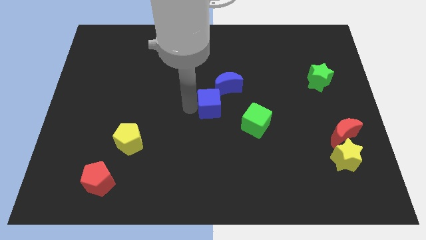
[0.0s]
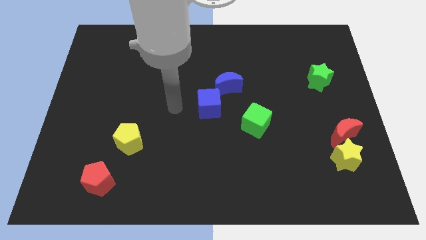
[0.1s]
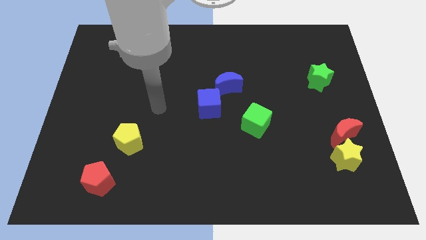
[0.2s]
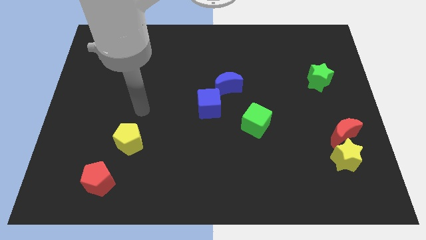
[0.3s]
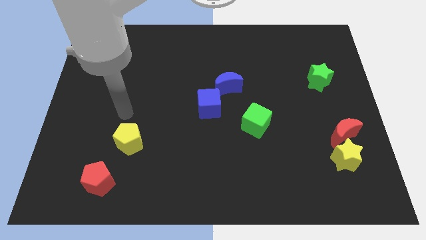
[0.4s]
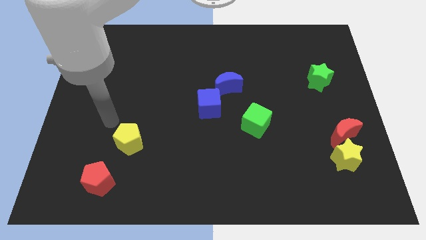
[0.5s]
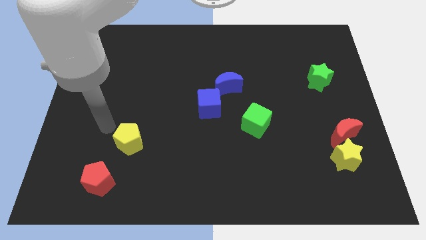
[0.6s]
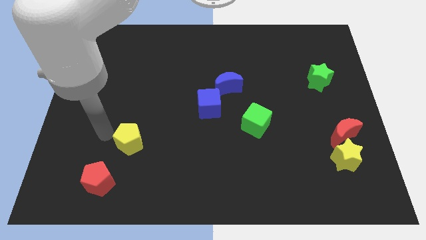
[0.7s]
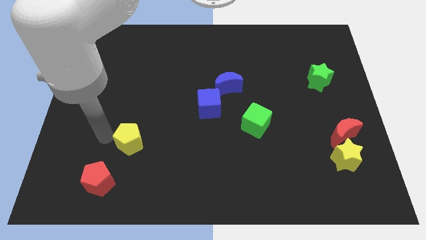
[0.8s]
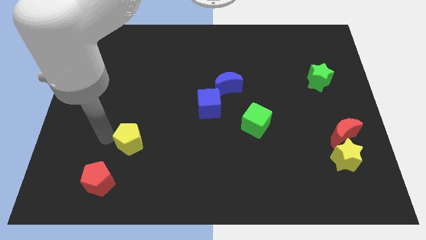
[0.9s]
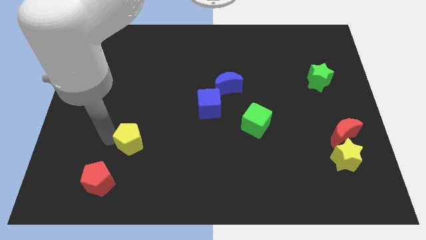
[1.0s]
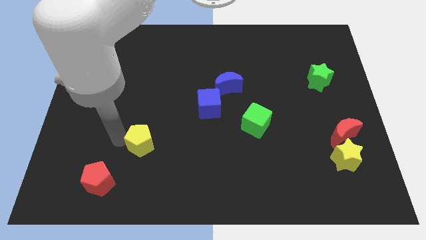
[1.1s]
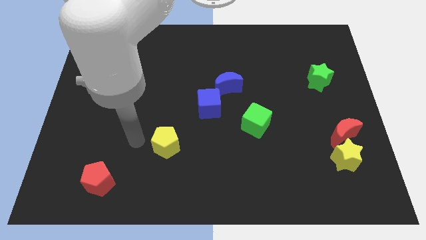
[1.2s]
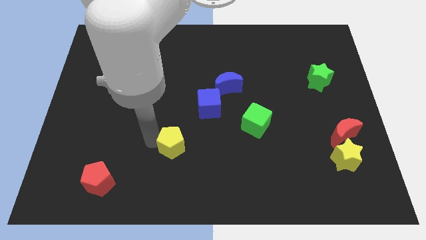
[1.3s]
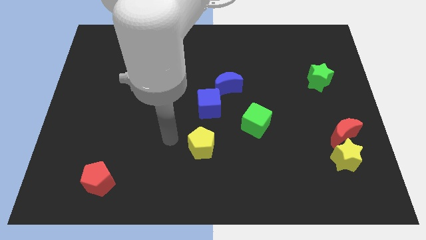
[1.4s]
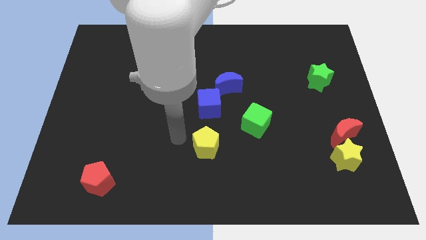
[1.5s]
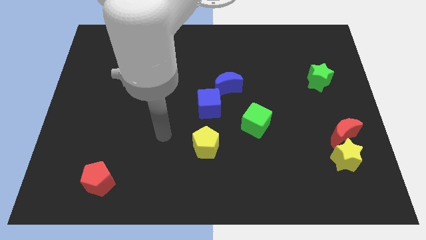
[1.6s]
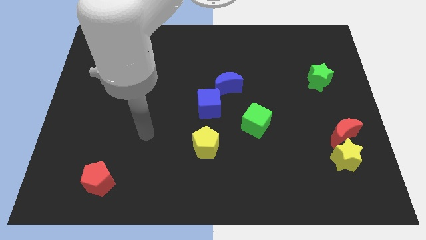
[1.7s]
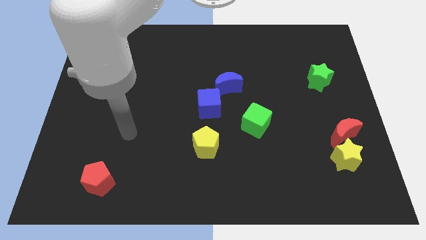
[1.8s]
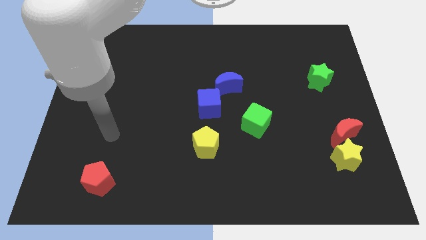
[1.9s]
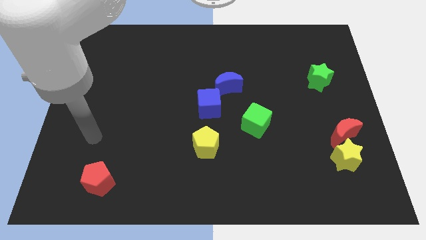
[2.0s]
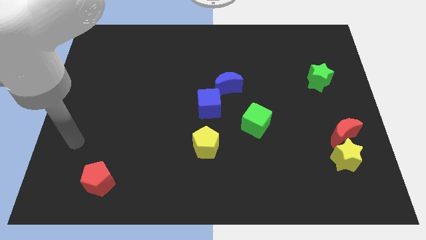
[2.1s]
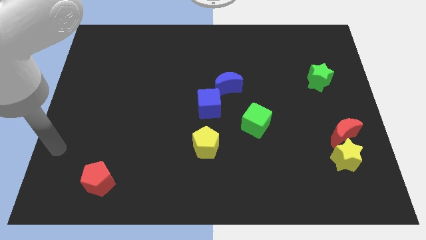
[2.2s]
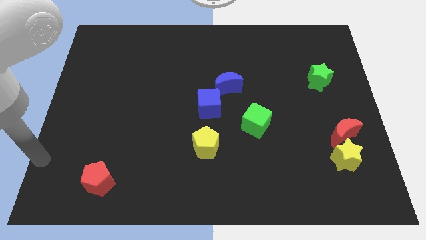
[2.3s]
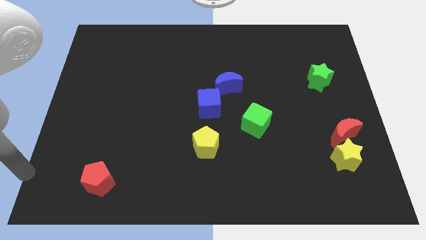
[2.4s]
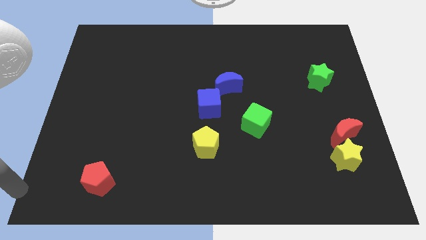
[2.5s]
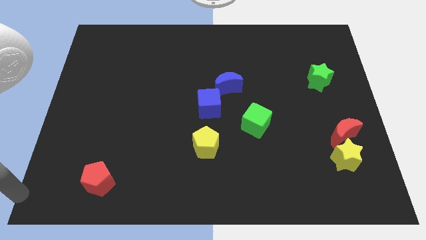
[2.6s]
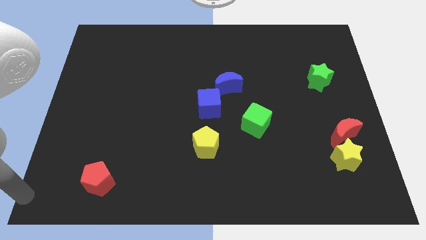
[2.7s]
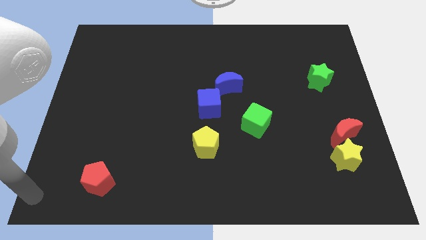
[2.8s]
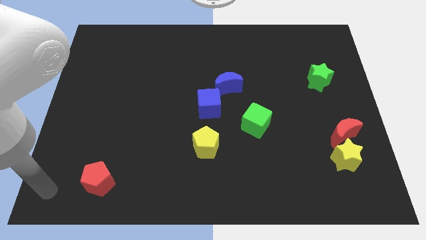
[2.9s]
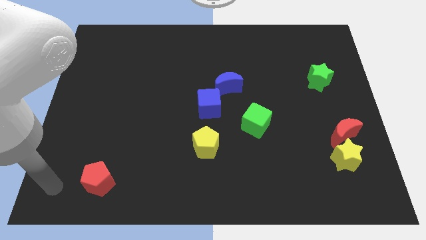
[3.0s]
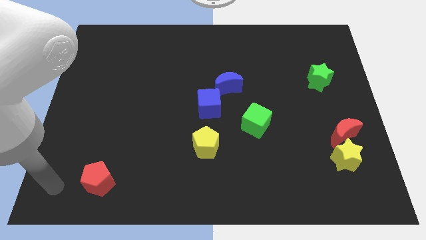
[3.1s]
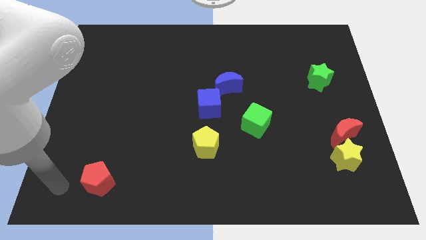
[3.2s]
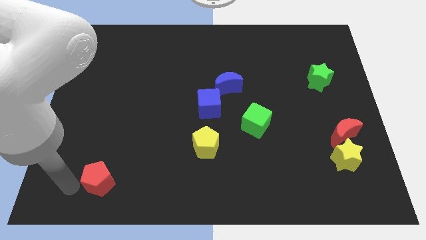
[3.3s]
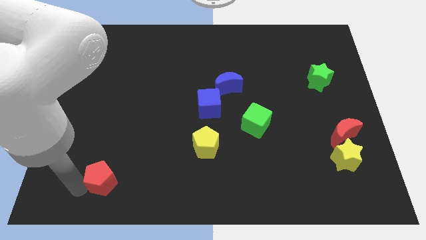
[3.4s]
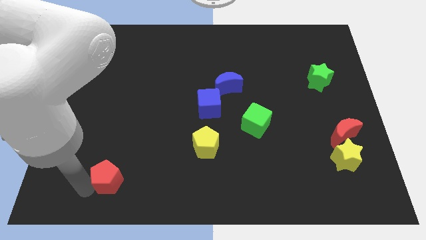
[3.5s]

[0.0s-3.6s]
place yellow pentagon below the blue cube

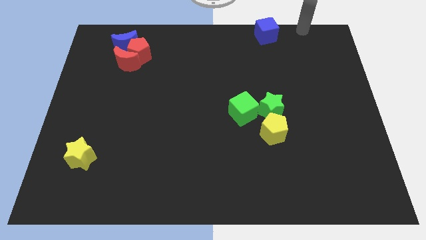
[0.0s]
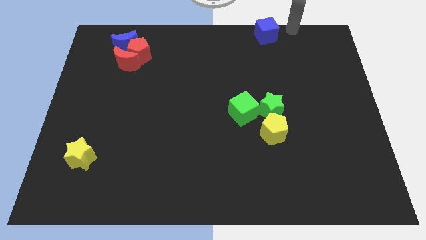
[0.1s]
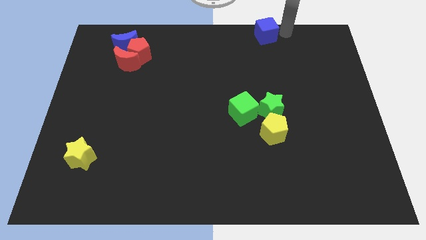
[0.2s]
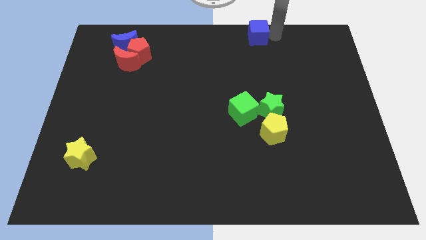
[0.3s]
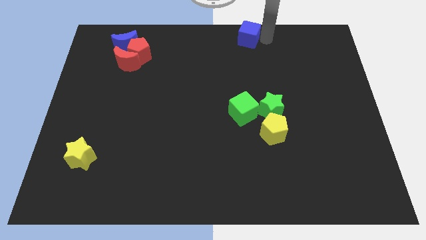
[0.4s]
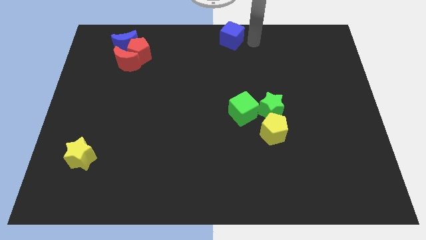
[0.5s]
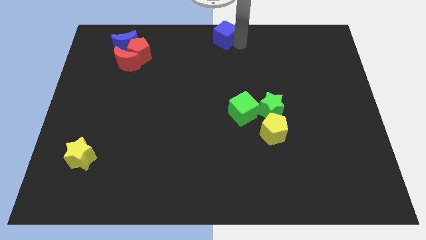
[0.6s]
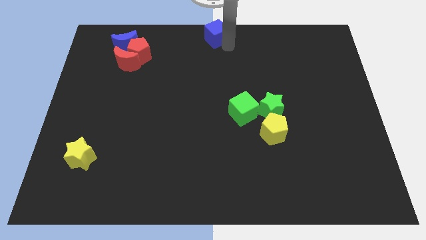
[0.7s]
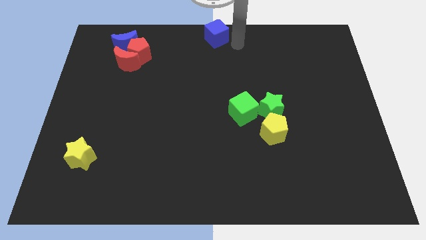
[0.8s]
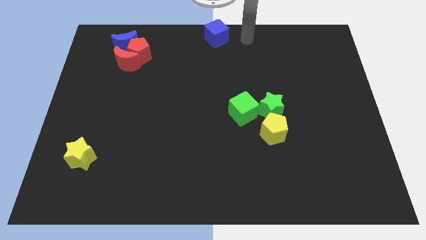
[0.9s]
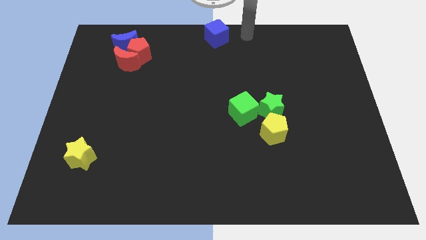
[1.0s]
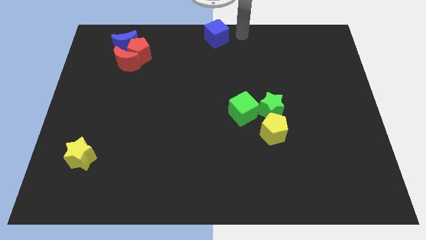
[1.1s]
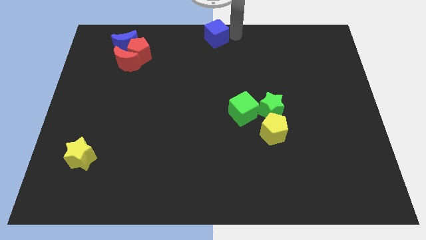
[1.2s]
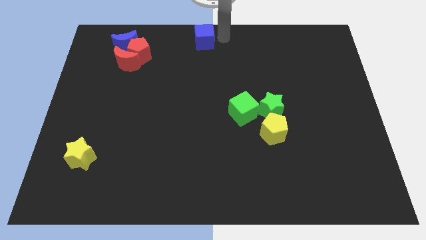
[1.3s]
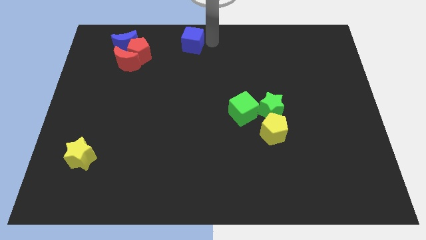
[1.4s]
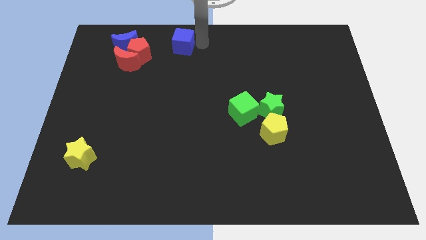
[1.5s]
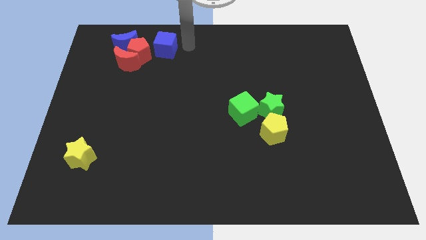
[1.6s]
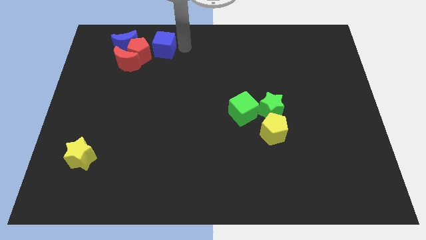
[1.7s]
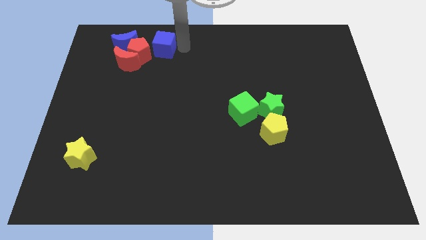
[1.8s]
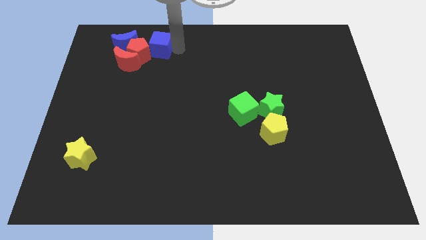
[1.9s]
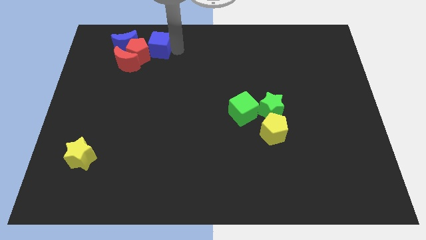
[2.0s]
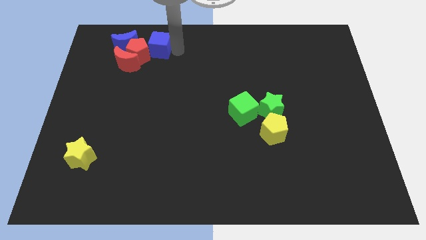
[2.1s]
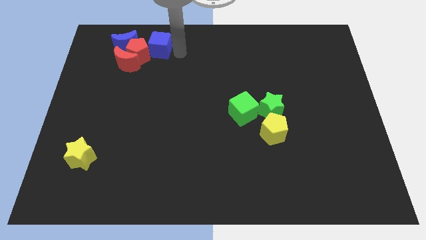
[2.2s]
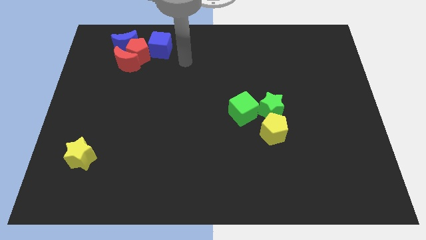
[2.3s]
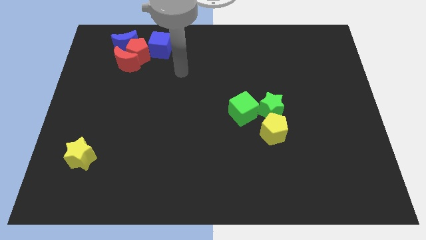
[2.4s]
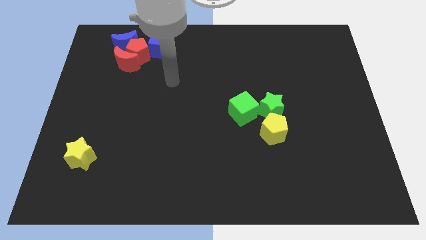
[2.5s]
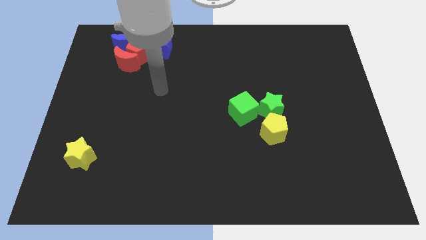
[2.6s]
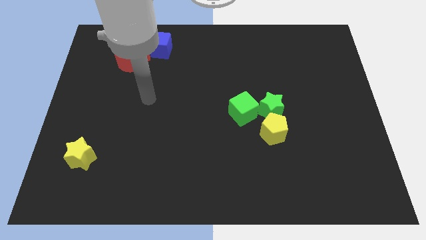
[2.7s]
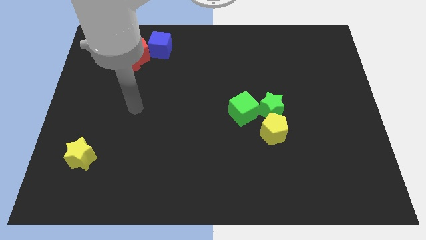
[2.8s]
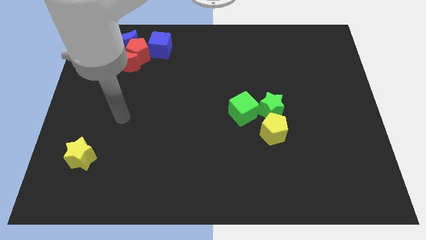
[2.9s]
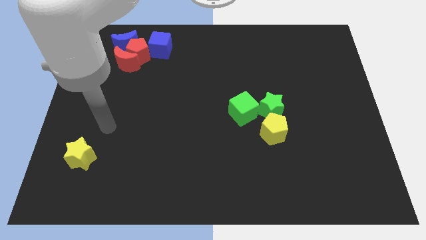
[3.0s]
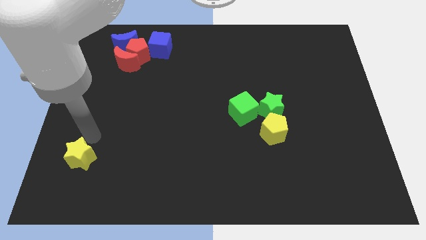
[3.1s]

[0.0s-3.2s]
push the blue cube close to the red pentagon

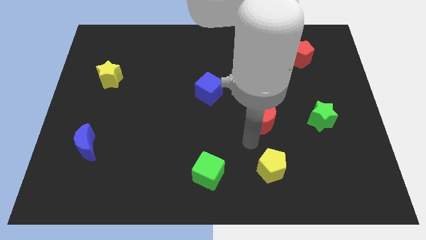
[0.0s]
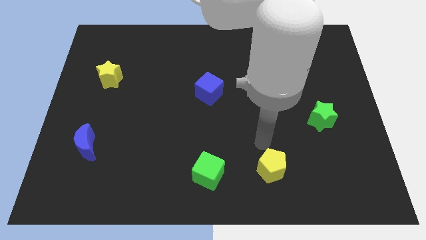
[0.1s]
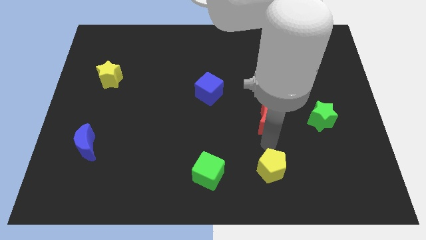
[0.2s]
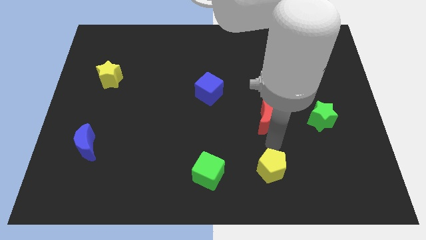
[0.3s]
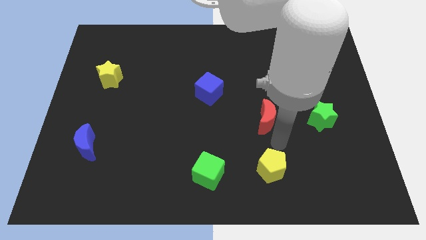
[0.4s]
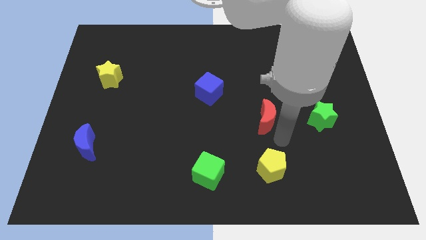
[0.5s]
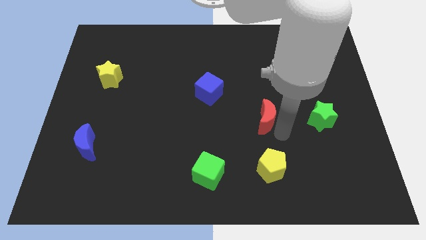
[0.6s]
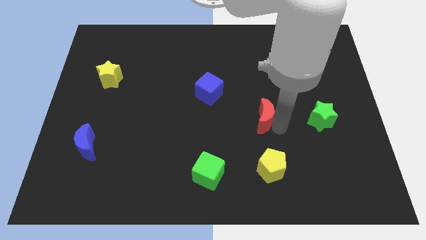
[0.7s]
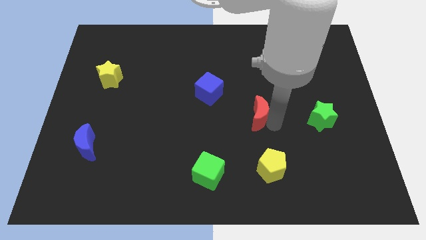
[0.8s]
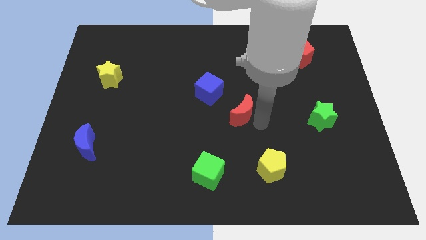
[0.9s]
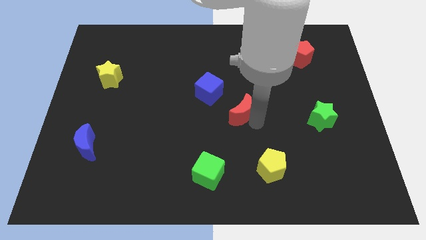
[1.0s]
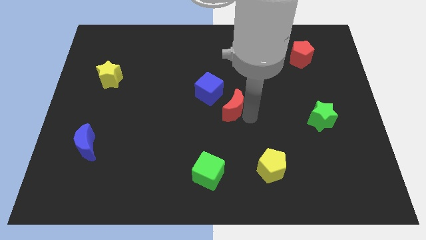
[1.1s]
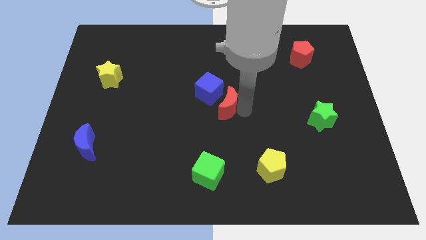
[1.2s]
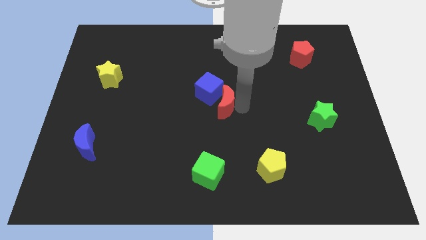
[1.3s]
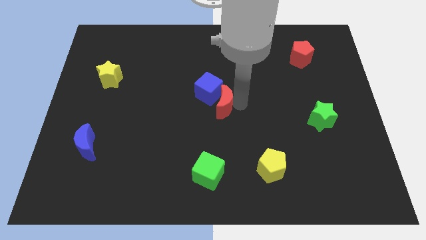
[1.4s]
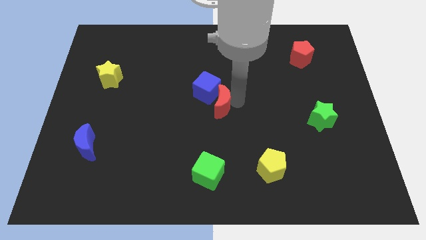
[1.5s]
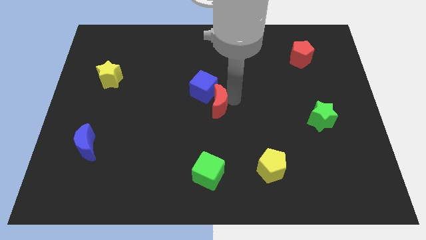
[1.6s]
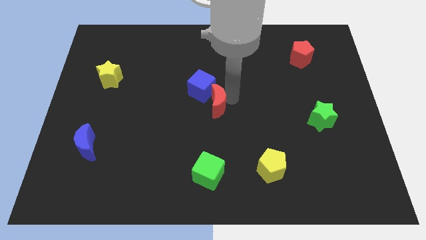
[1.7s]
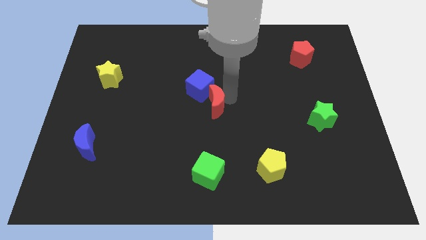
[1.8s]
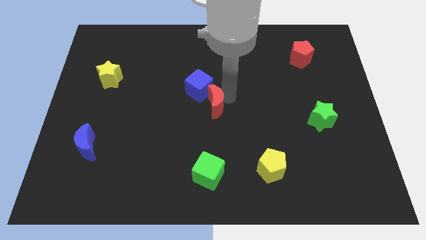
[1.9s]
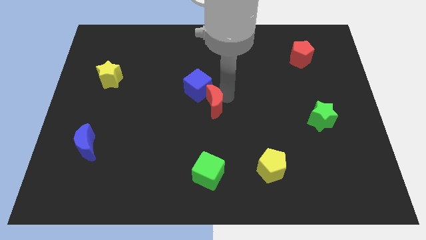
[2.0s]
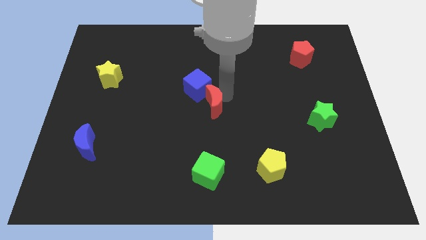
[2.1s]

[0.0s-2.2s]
move the red moon into the blue cube
